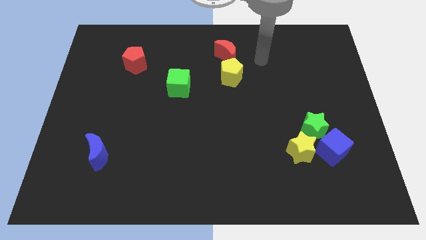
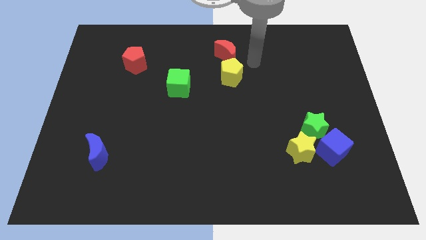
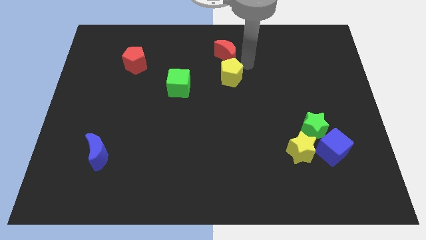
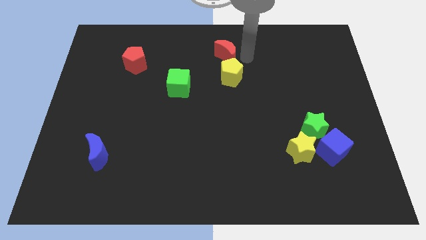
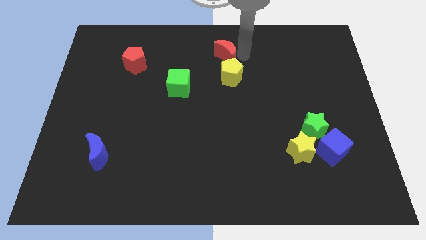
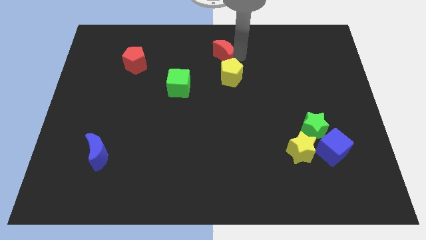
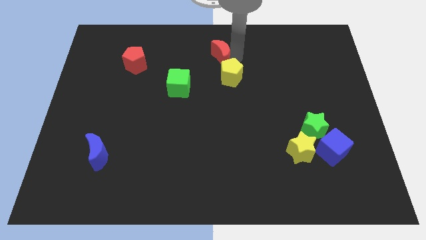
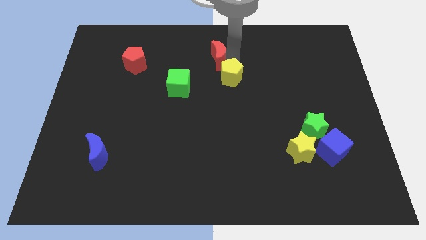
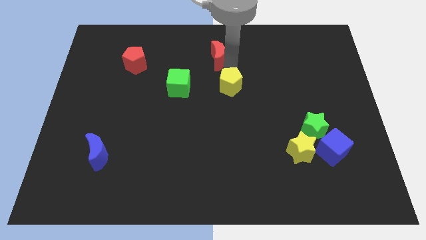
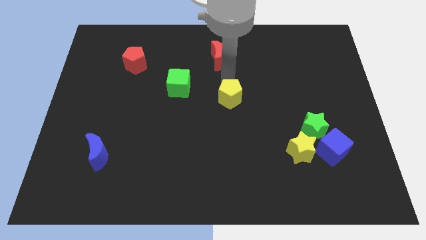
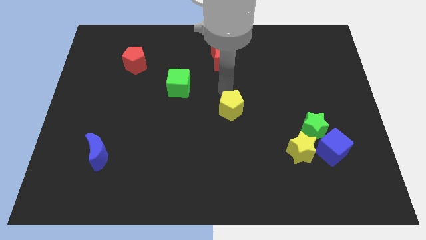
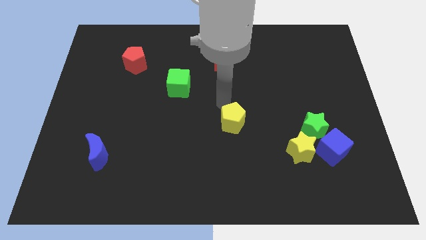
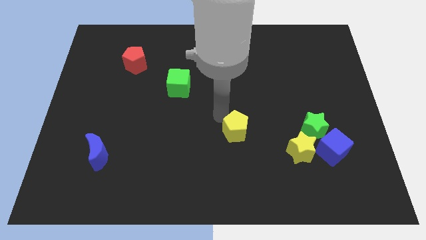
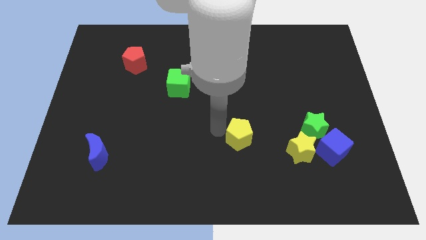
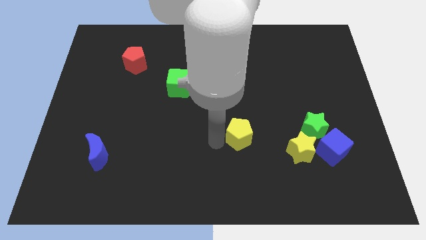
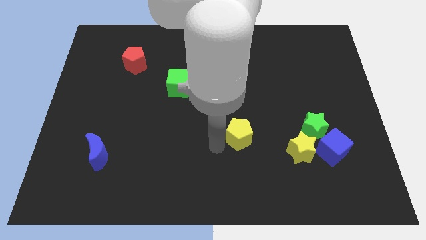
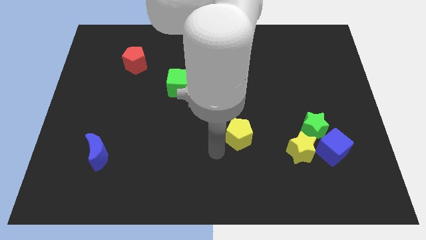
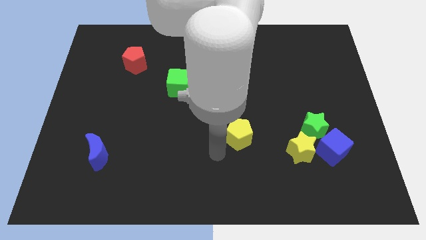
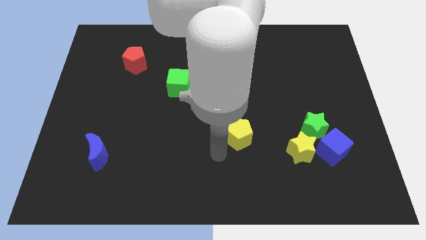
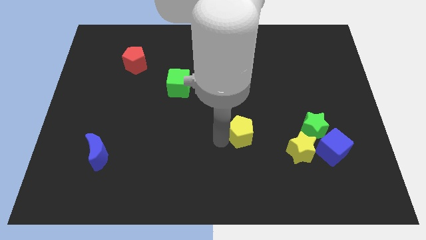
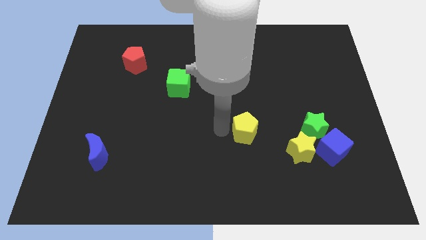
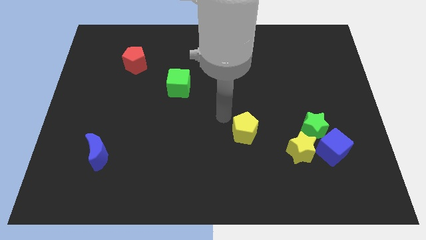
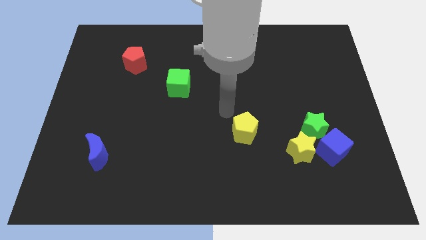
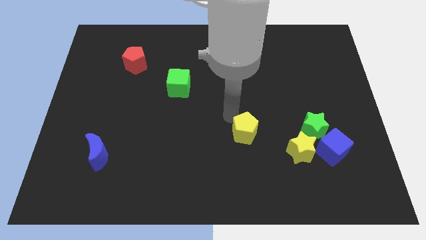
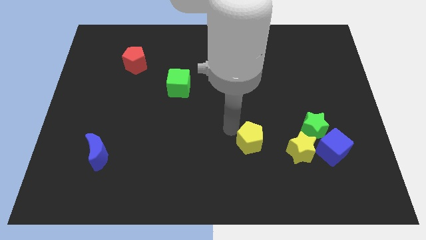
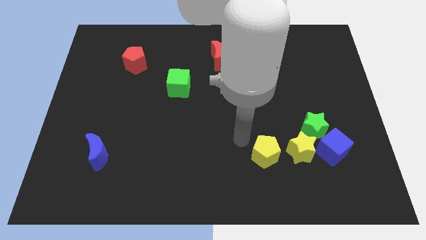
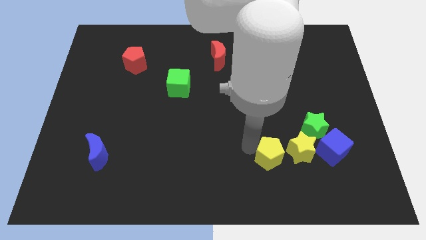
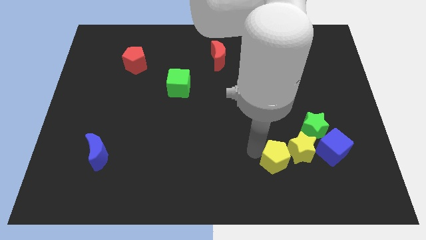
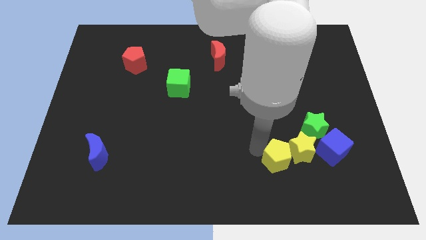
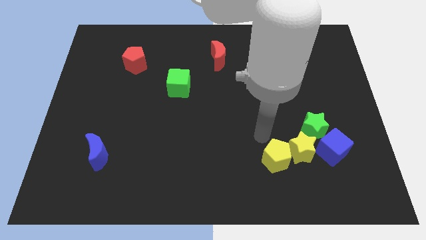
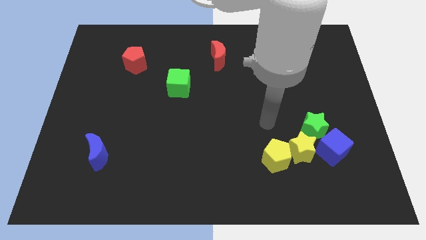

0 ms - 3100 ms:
separate yellow pentagon from red moon

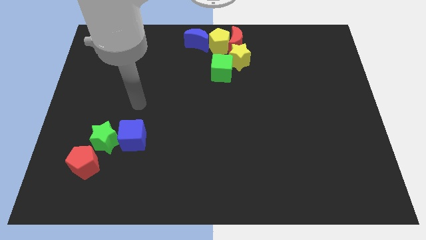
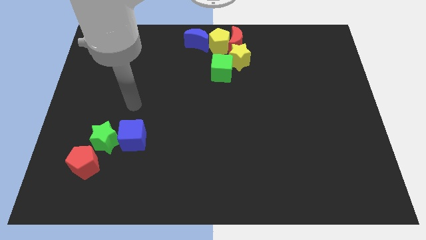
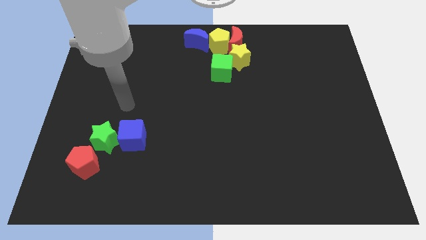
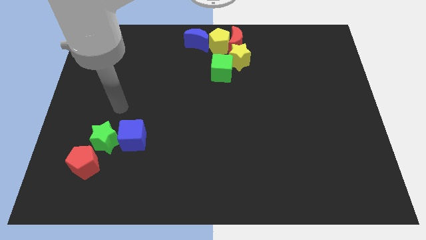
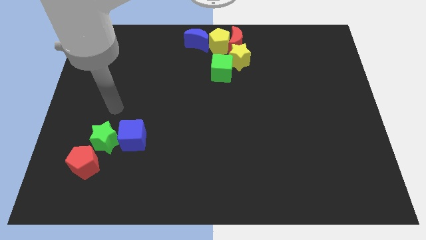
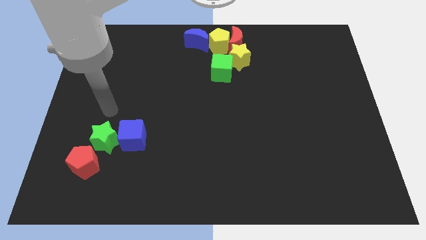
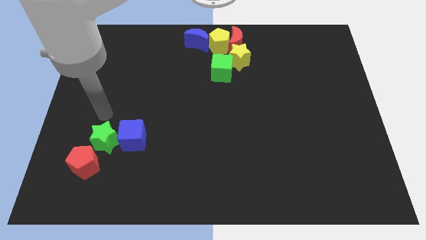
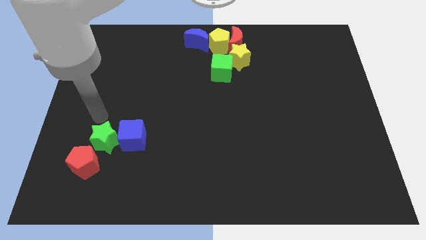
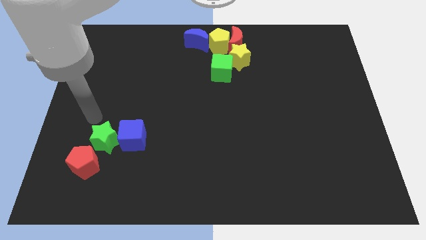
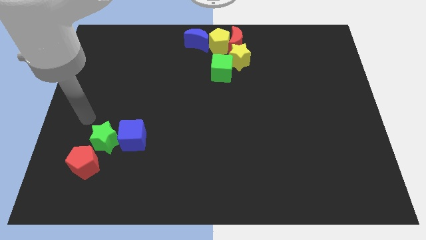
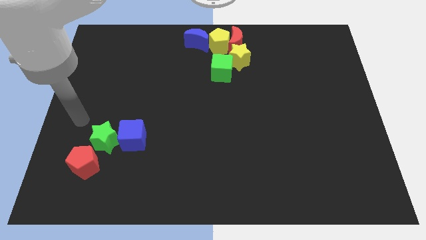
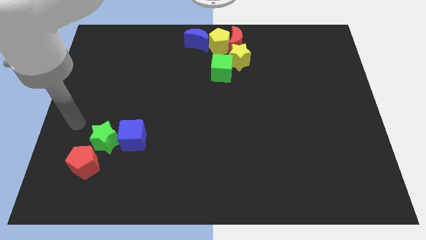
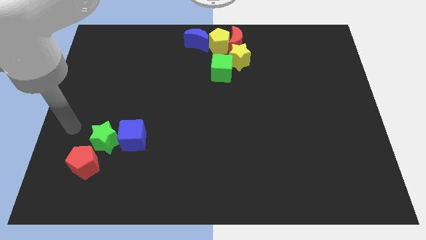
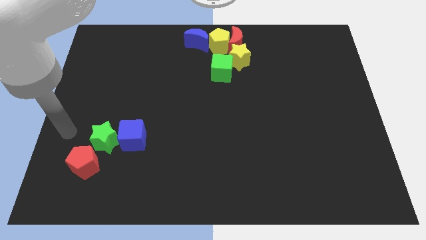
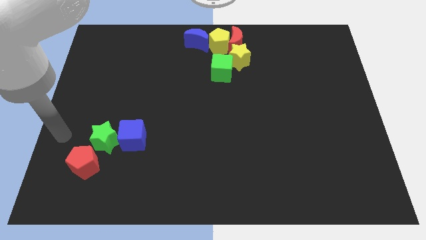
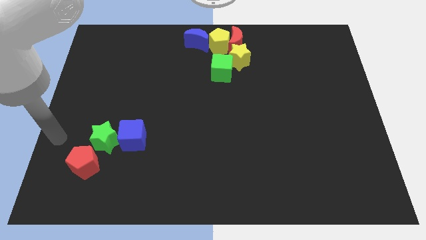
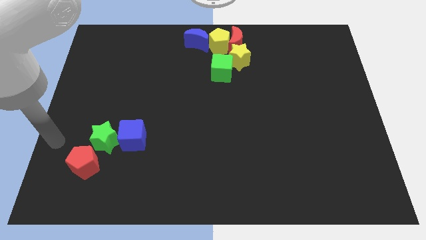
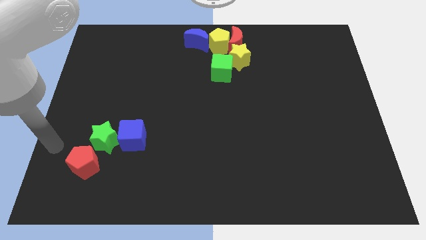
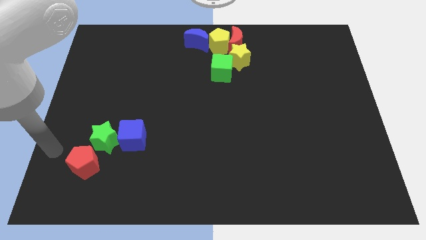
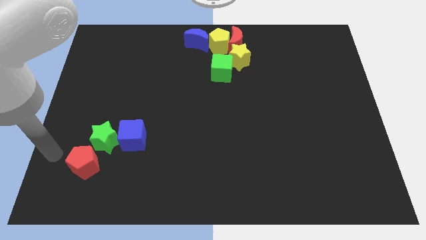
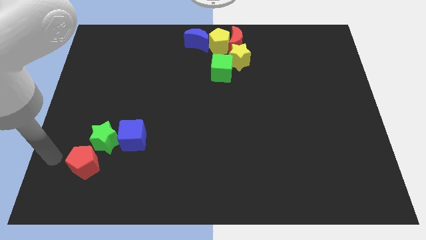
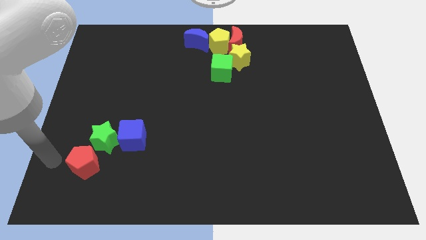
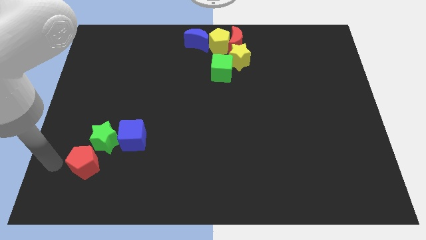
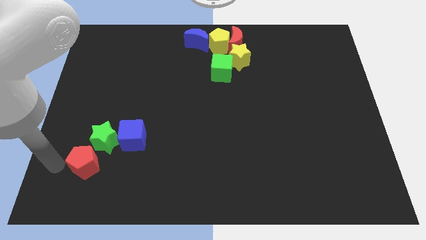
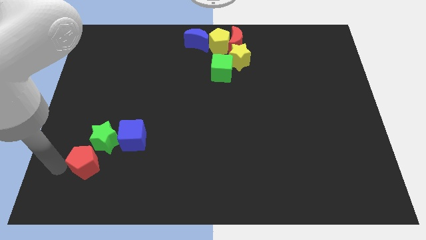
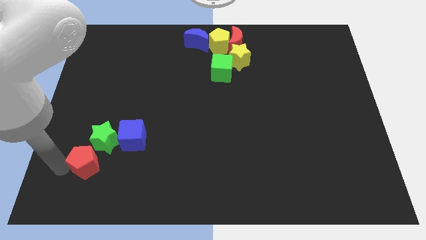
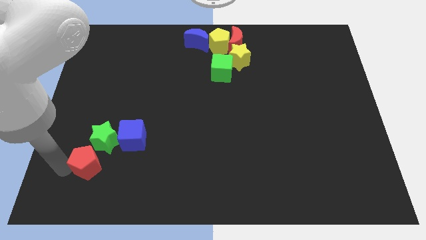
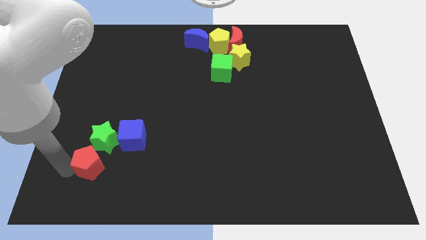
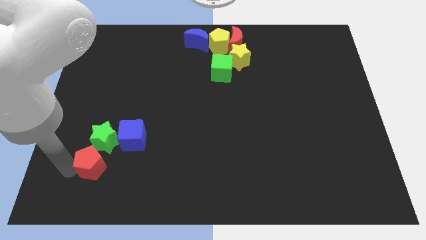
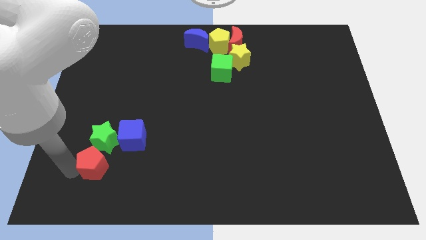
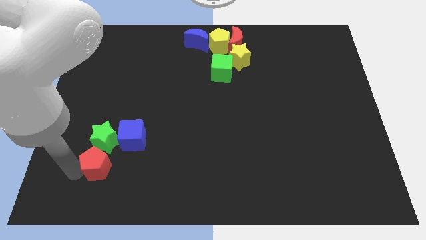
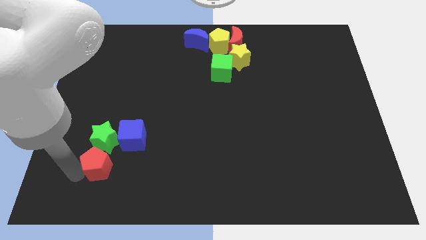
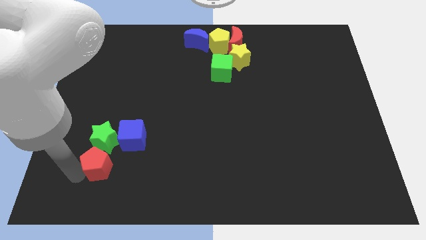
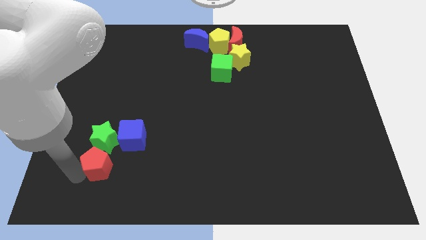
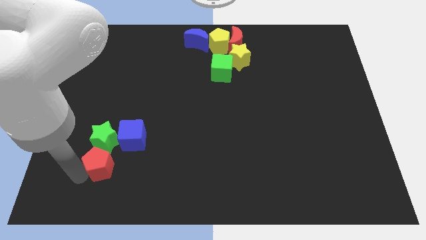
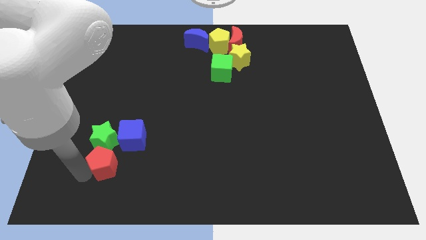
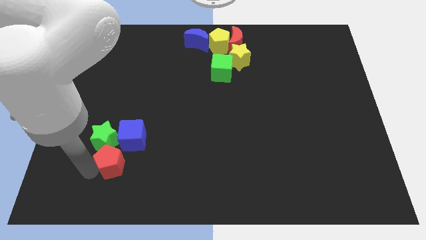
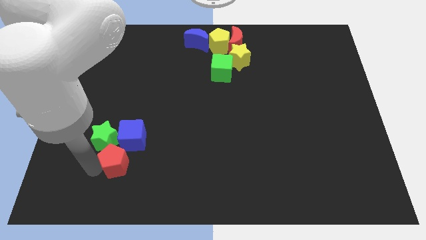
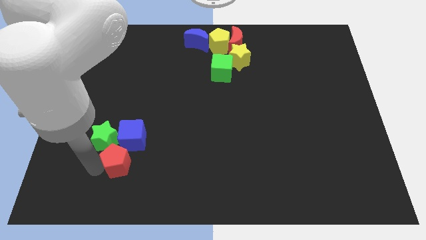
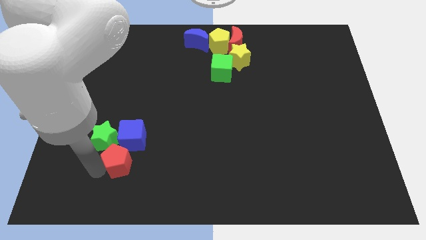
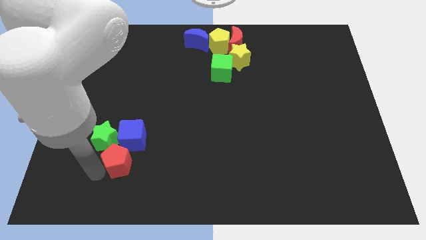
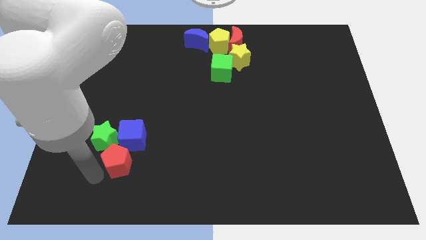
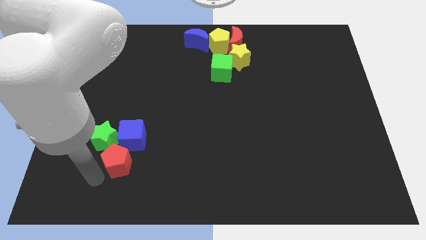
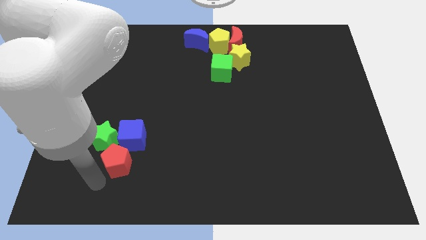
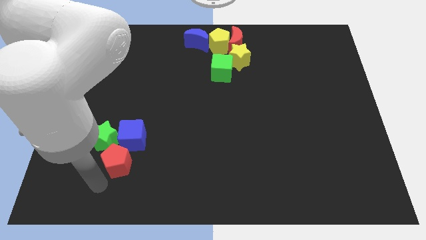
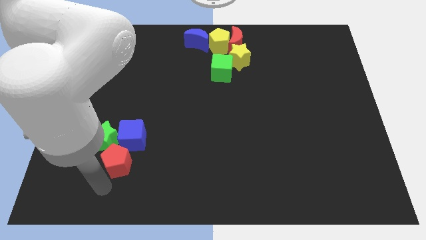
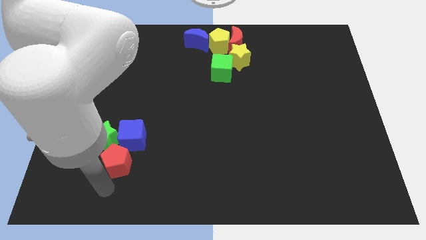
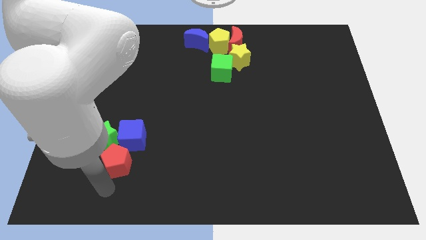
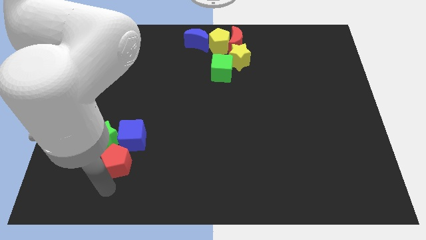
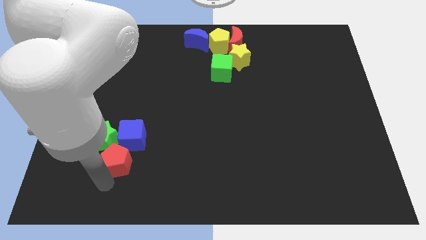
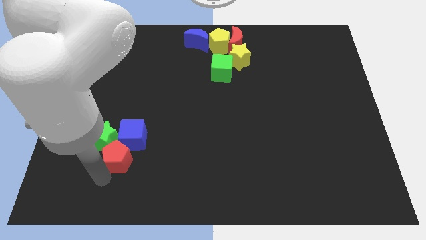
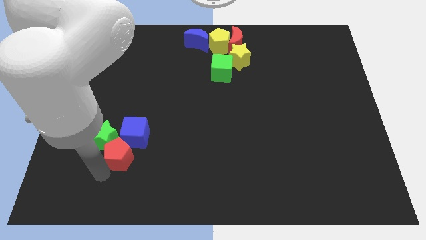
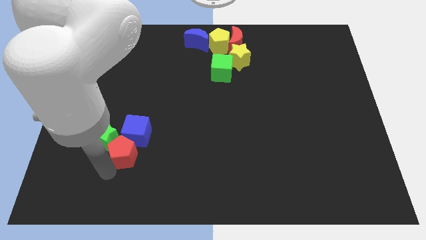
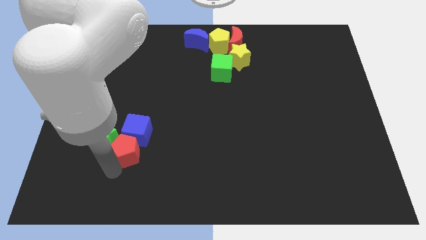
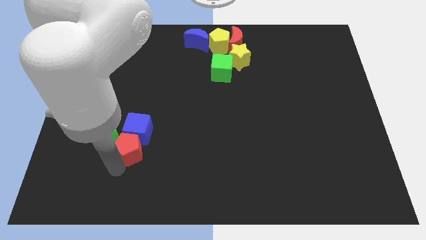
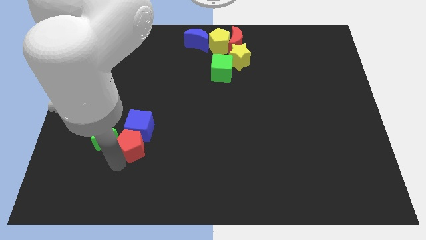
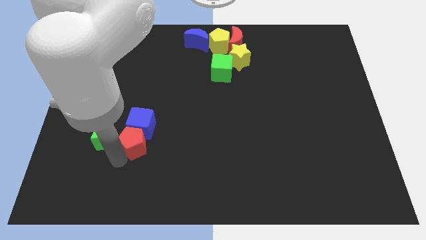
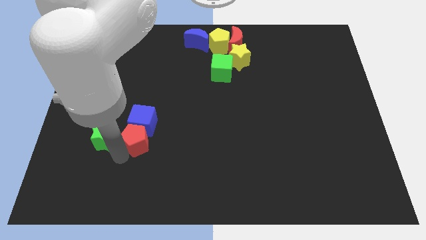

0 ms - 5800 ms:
push the red pentagon to the right of the green cube
